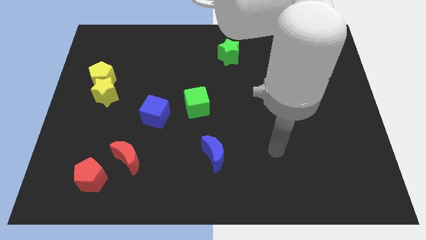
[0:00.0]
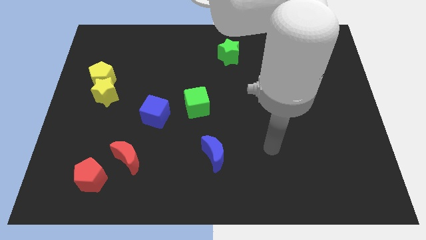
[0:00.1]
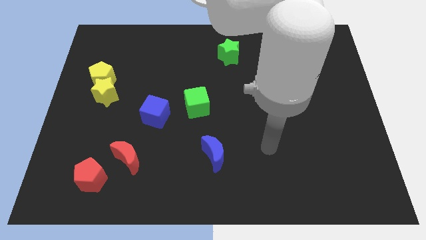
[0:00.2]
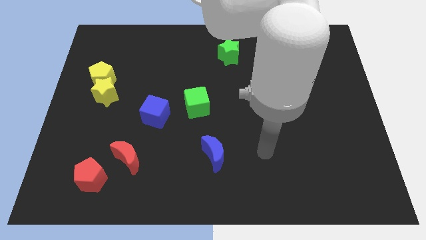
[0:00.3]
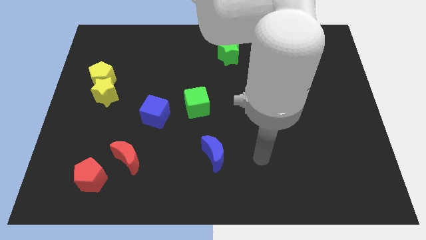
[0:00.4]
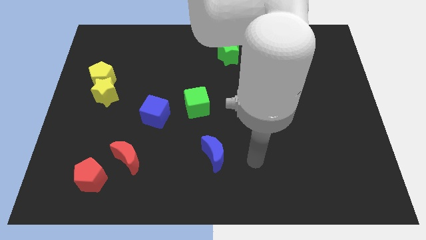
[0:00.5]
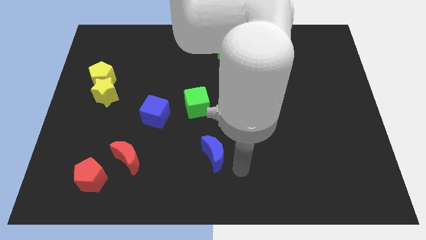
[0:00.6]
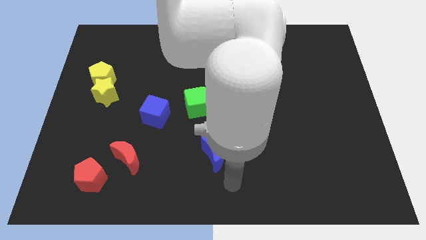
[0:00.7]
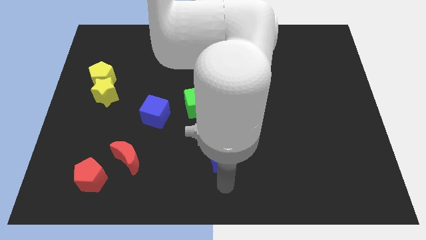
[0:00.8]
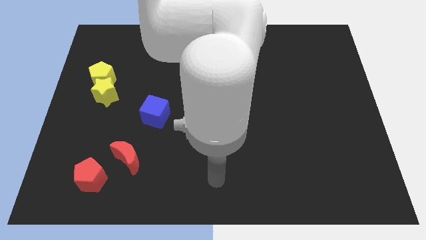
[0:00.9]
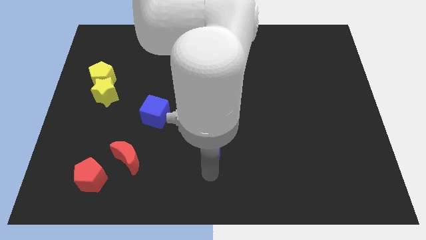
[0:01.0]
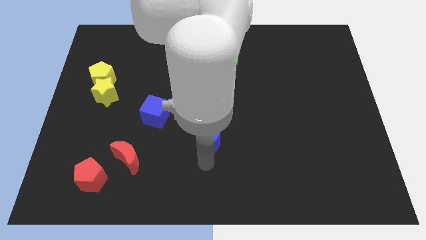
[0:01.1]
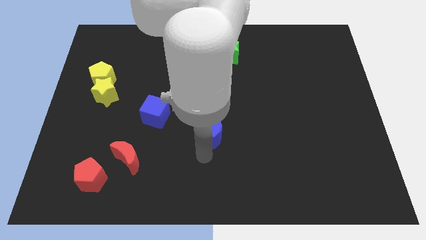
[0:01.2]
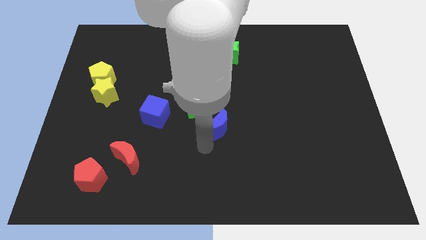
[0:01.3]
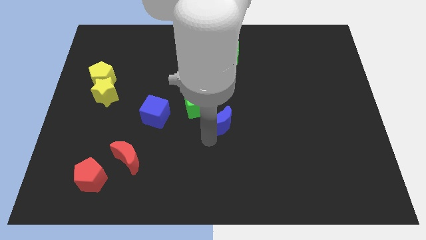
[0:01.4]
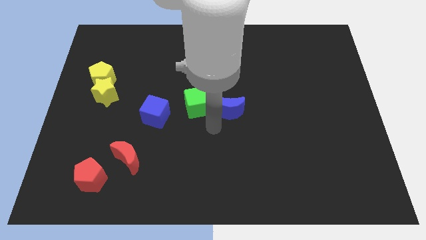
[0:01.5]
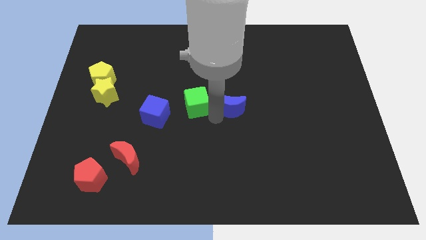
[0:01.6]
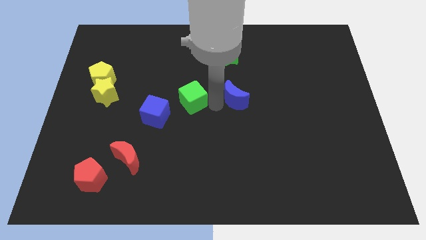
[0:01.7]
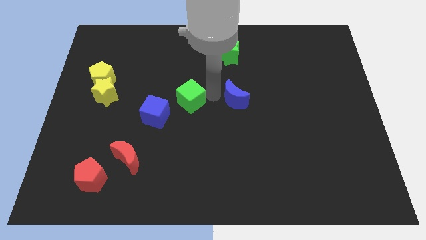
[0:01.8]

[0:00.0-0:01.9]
move the blue moon vertically to the bottom of the green star

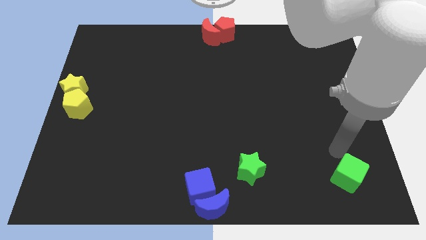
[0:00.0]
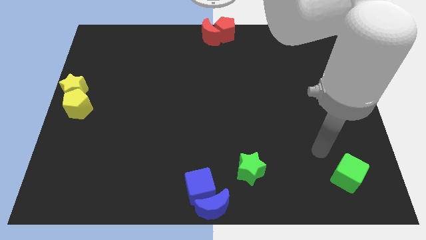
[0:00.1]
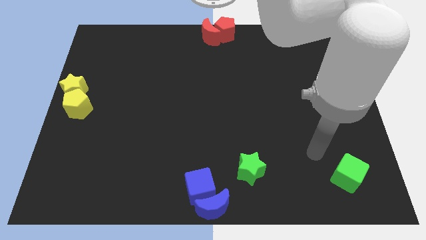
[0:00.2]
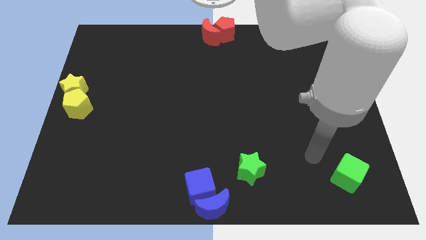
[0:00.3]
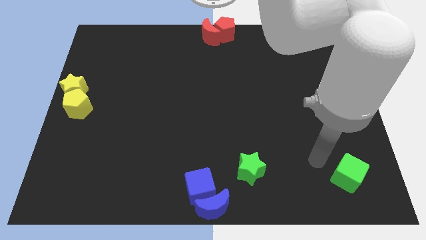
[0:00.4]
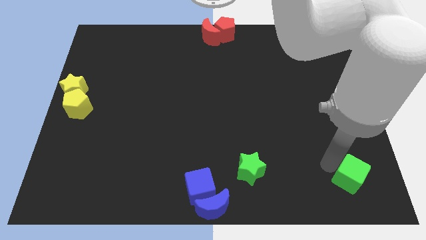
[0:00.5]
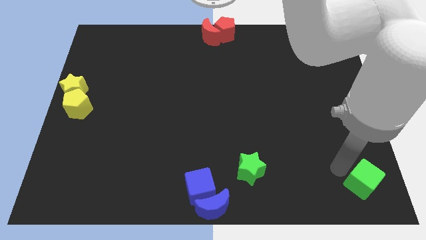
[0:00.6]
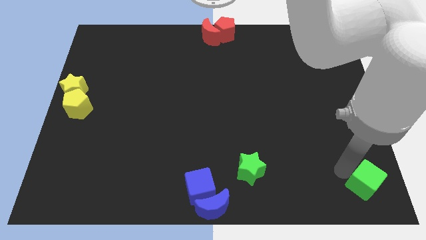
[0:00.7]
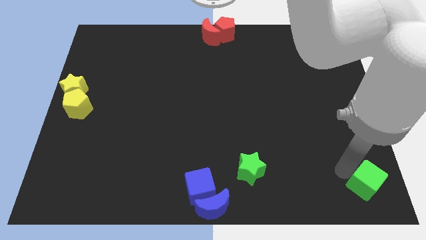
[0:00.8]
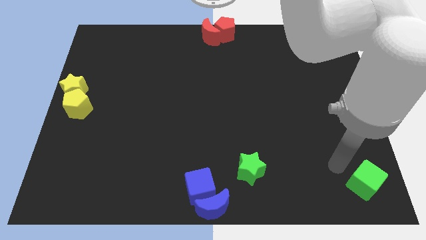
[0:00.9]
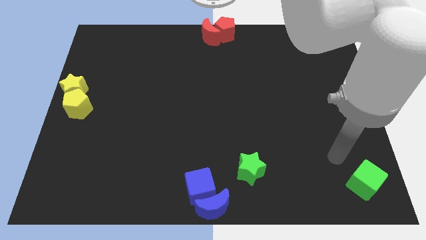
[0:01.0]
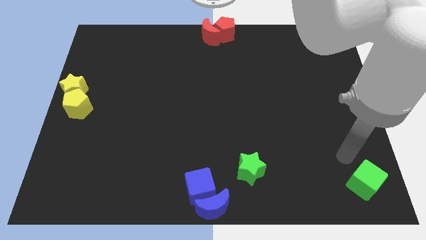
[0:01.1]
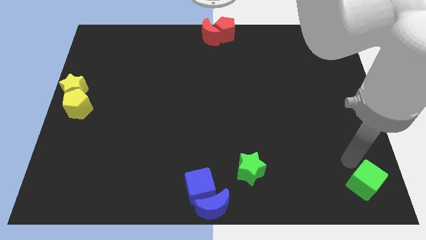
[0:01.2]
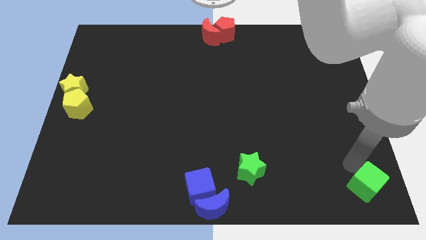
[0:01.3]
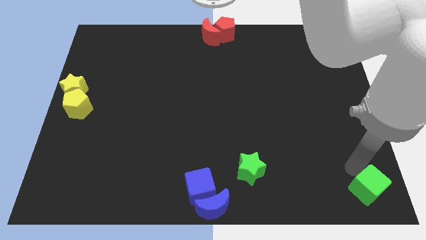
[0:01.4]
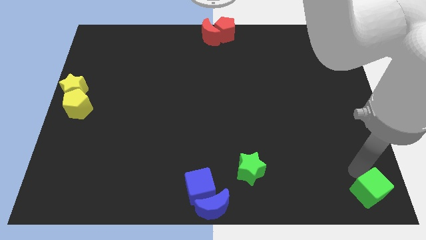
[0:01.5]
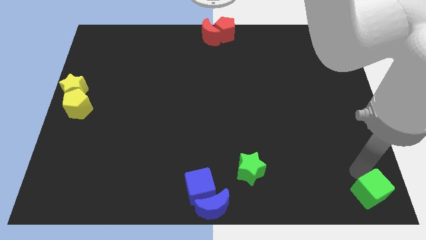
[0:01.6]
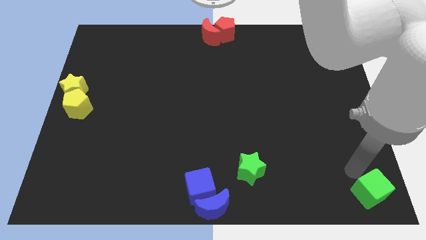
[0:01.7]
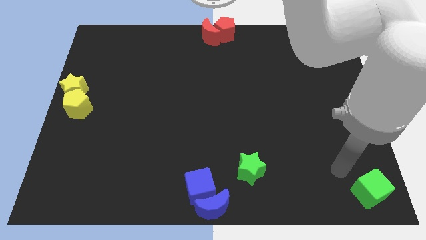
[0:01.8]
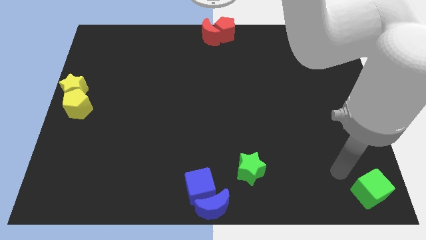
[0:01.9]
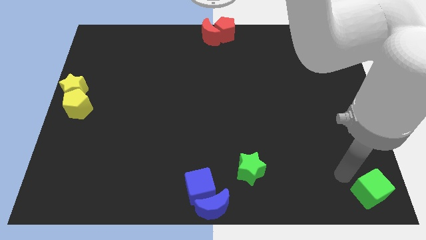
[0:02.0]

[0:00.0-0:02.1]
move the green cube towards the bottom right corner of the board

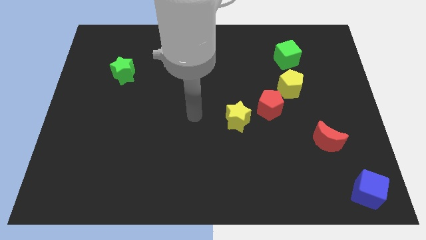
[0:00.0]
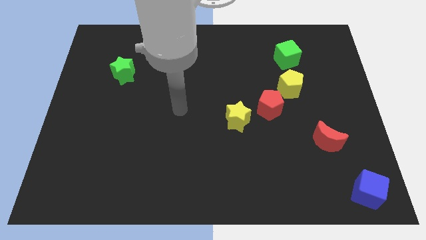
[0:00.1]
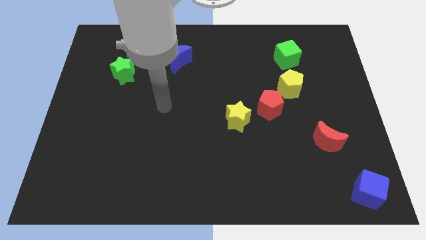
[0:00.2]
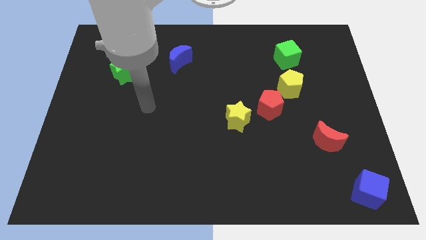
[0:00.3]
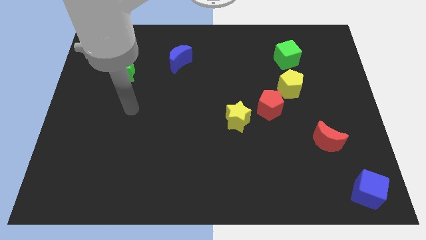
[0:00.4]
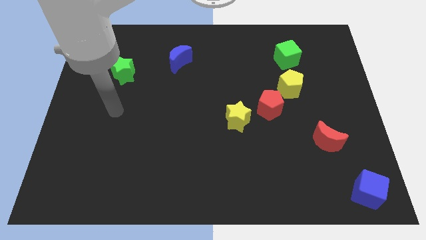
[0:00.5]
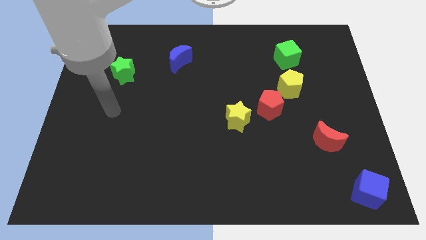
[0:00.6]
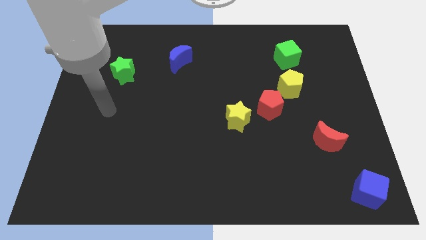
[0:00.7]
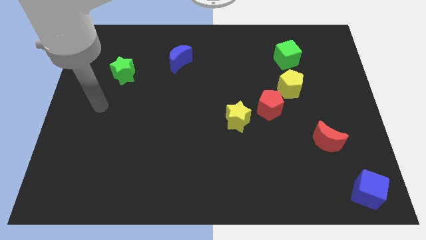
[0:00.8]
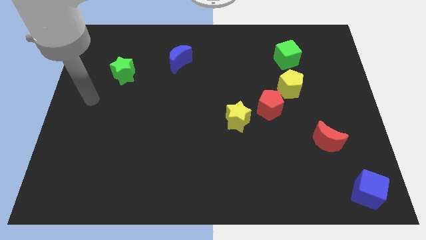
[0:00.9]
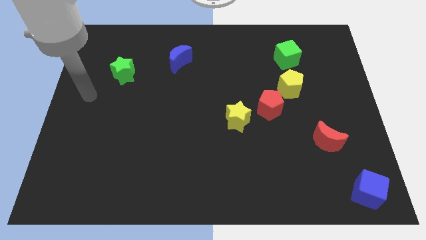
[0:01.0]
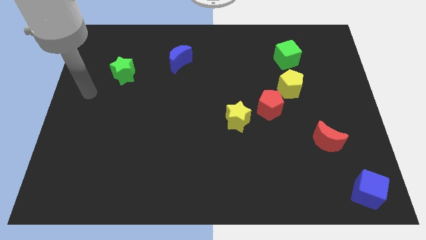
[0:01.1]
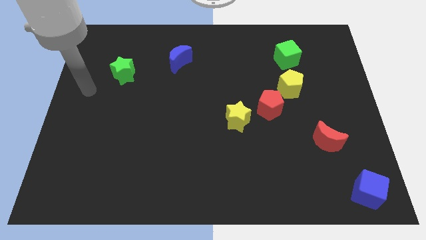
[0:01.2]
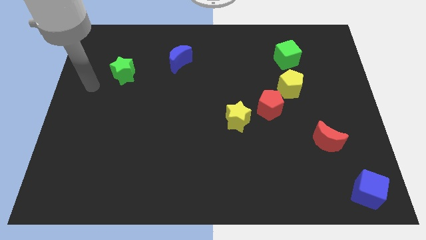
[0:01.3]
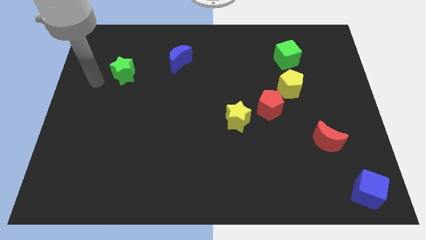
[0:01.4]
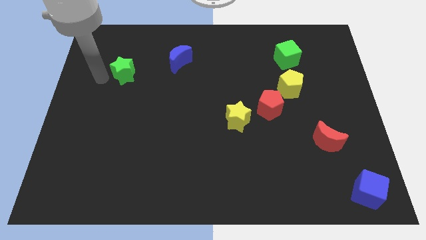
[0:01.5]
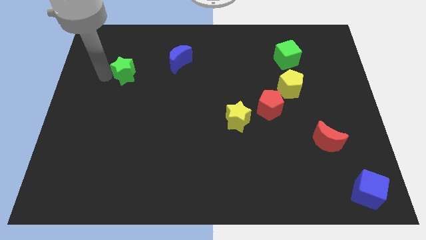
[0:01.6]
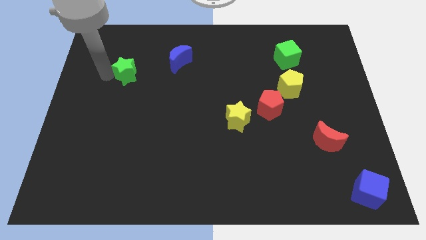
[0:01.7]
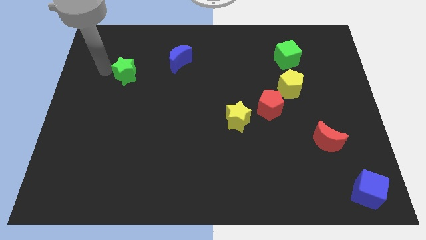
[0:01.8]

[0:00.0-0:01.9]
move your arm closer to the green star

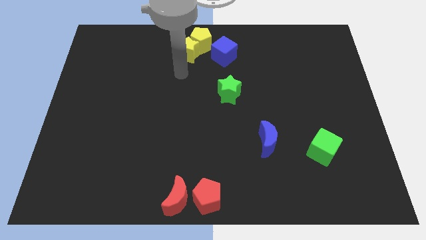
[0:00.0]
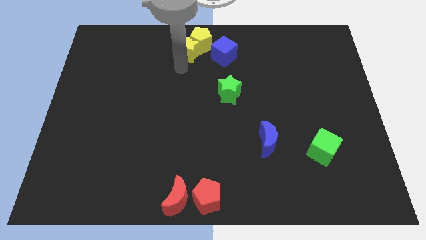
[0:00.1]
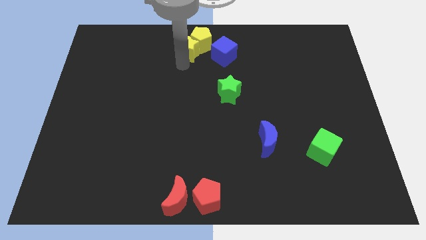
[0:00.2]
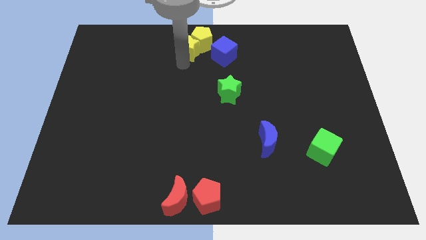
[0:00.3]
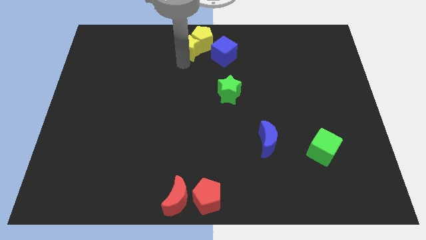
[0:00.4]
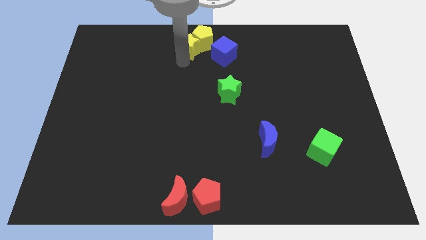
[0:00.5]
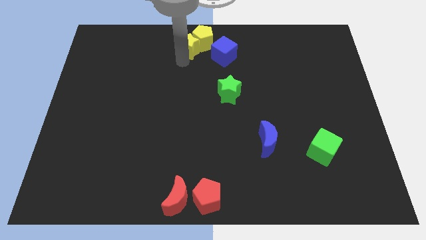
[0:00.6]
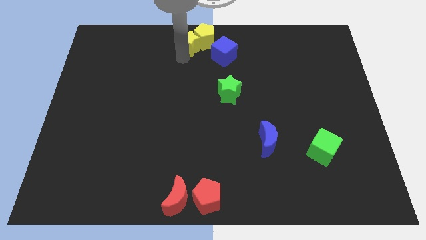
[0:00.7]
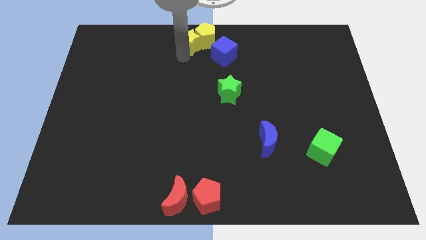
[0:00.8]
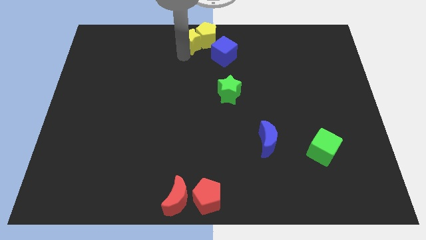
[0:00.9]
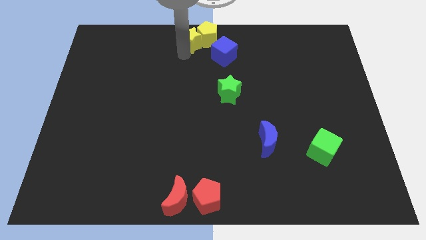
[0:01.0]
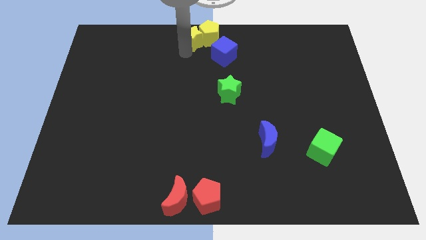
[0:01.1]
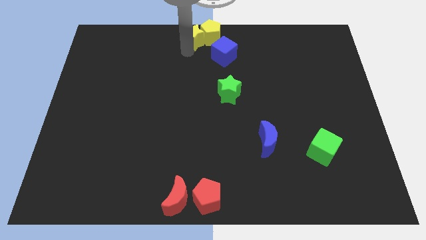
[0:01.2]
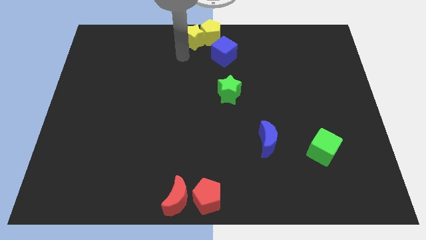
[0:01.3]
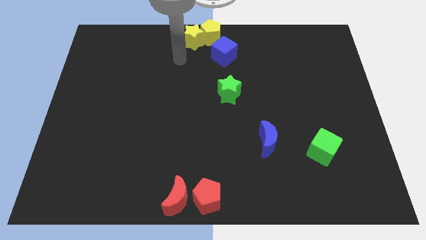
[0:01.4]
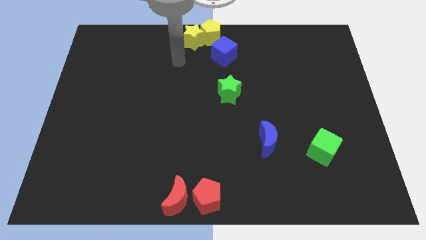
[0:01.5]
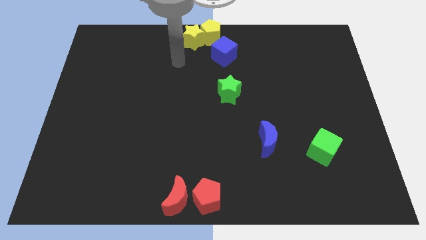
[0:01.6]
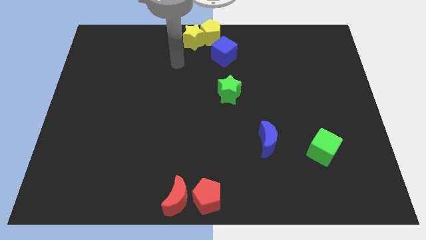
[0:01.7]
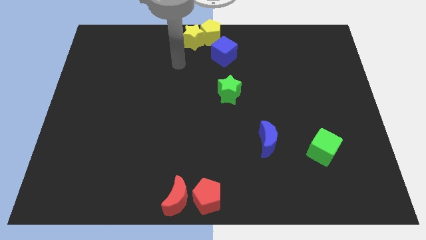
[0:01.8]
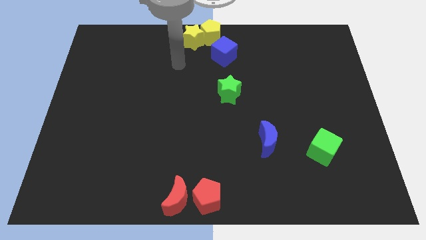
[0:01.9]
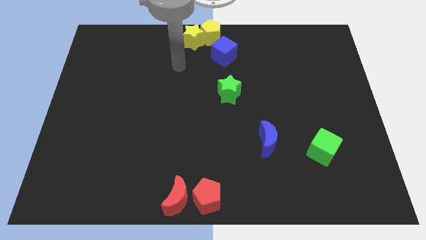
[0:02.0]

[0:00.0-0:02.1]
move yellow star and yellow pentagon to the top center of the board

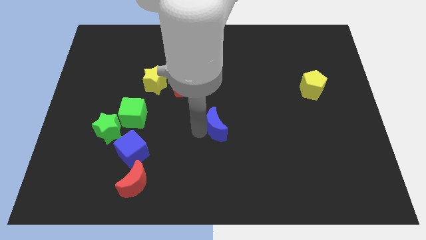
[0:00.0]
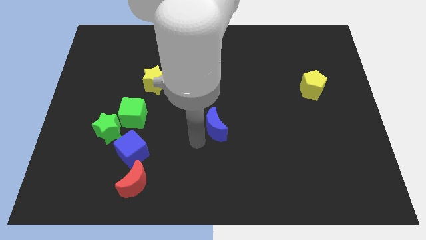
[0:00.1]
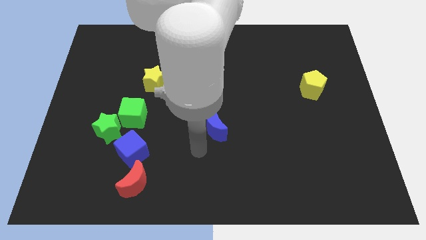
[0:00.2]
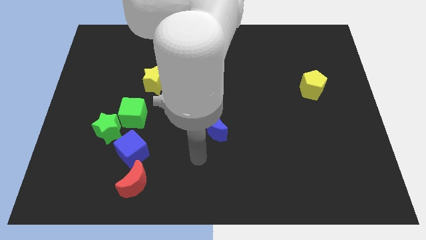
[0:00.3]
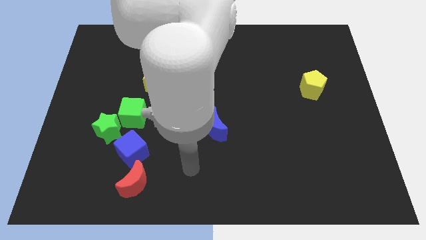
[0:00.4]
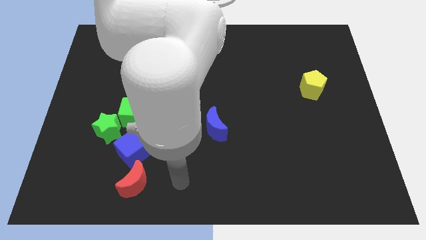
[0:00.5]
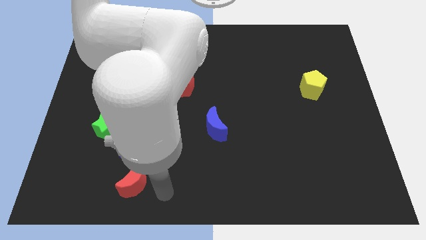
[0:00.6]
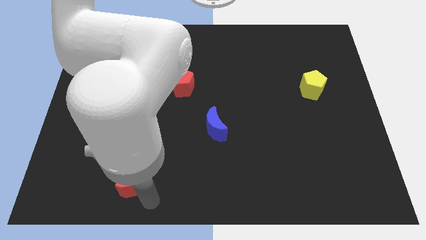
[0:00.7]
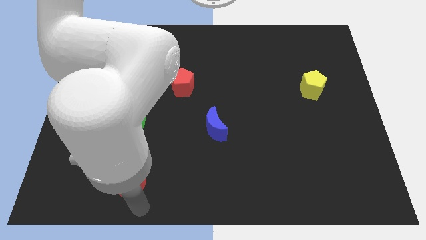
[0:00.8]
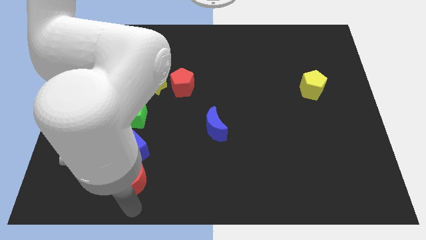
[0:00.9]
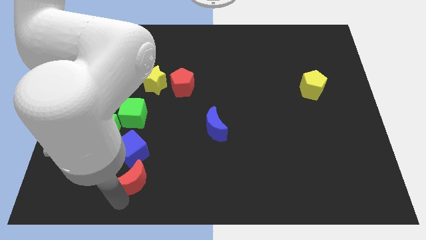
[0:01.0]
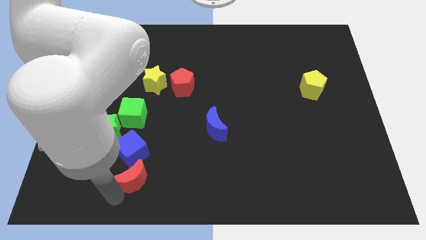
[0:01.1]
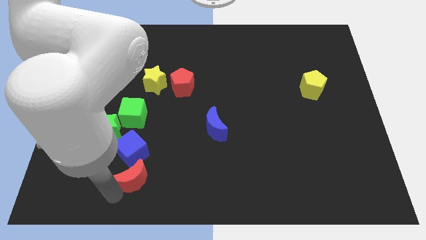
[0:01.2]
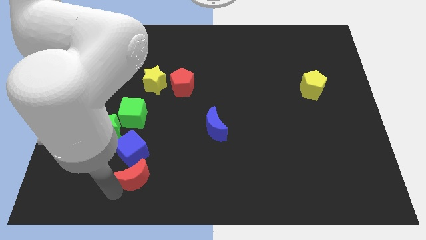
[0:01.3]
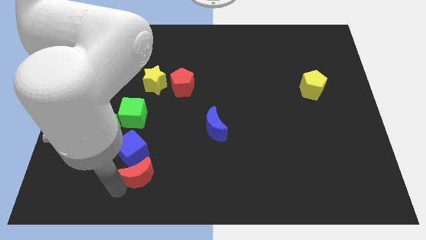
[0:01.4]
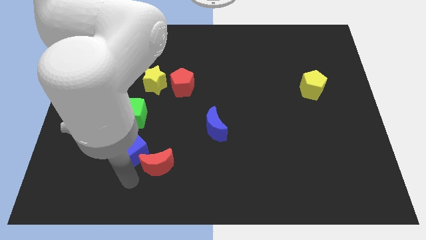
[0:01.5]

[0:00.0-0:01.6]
move the red moon towards the right side of the blue cube
